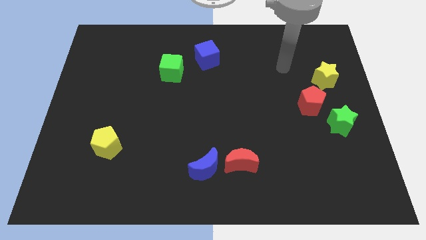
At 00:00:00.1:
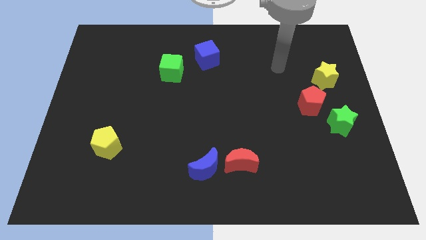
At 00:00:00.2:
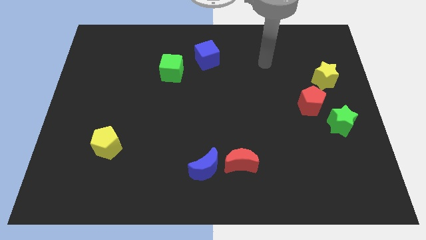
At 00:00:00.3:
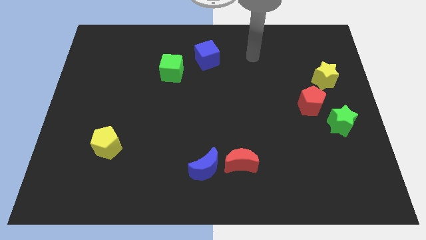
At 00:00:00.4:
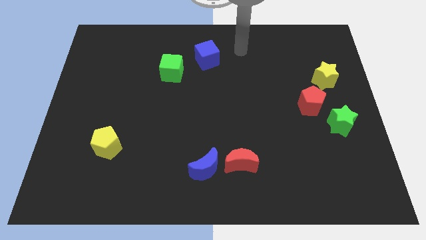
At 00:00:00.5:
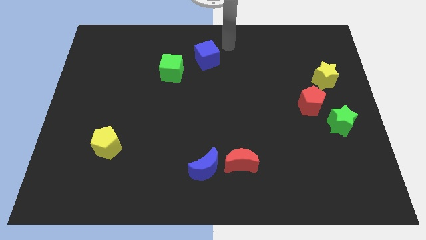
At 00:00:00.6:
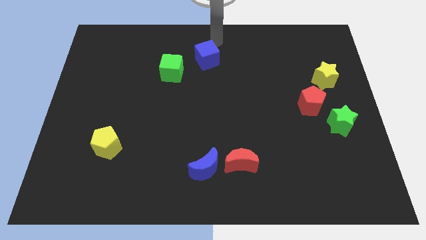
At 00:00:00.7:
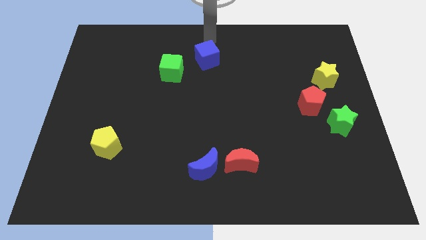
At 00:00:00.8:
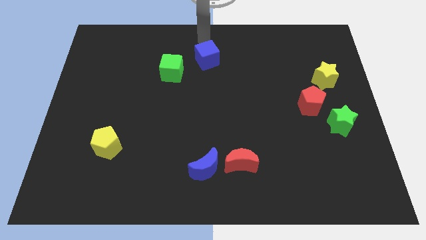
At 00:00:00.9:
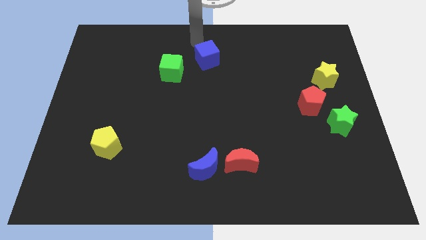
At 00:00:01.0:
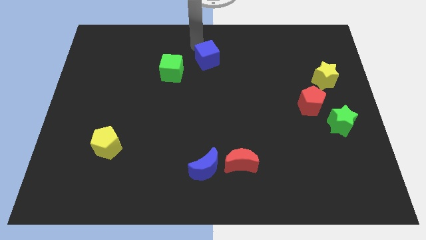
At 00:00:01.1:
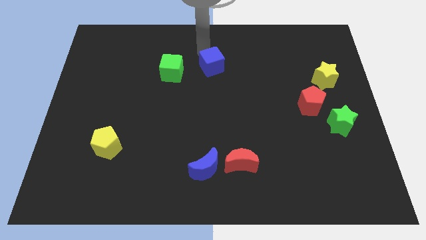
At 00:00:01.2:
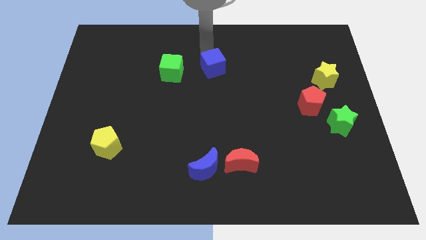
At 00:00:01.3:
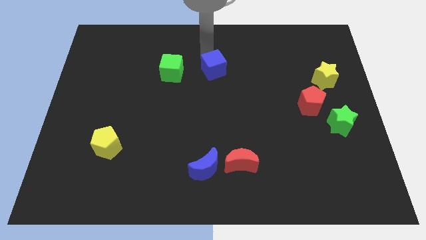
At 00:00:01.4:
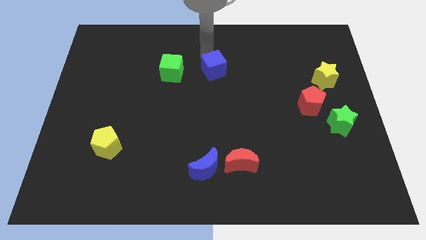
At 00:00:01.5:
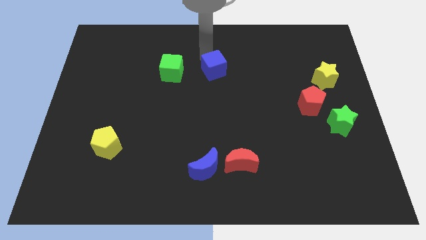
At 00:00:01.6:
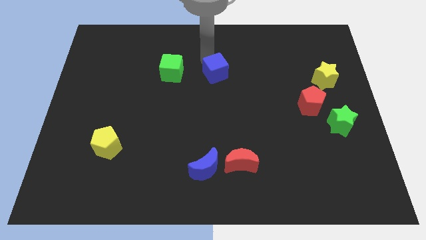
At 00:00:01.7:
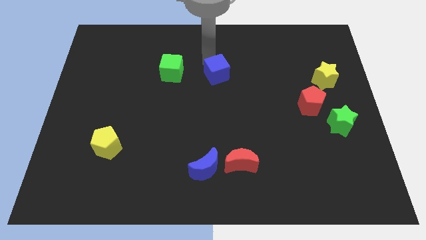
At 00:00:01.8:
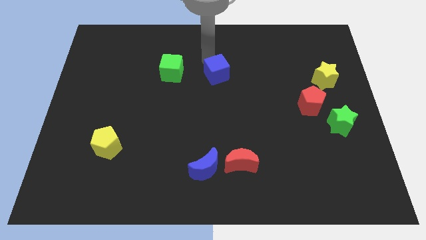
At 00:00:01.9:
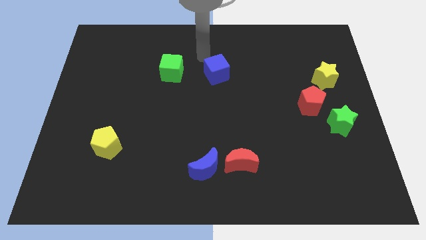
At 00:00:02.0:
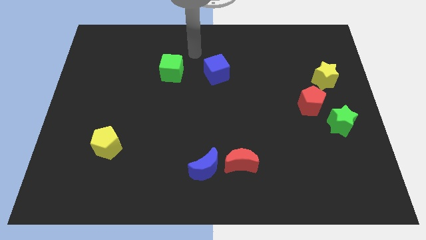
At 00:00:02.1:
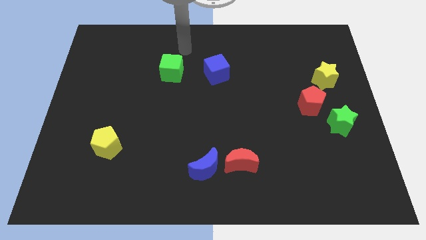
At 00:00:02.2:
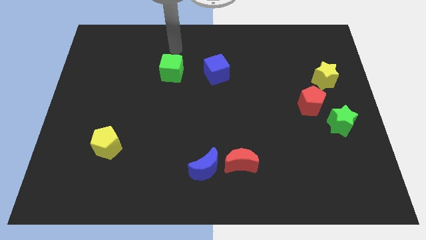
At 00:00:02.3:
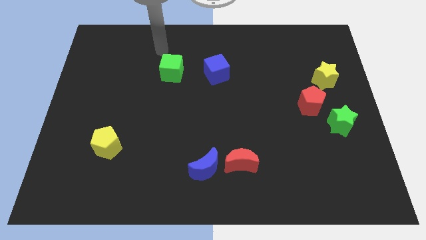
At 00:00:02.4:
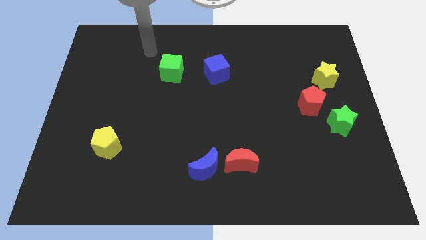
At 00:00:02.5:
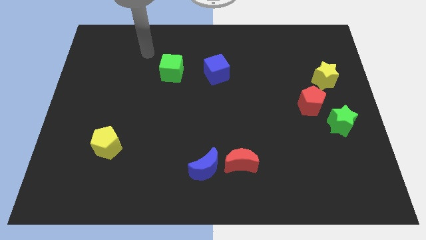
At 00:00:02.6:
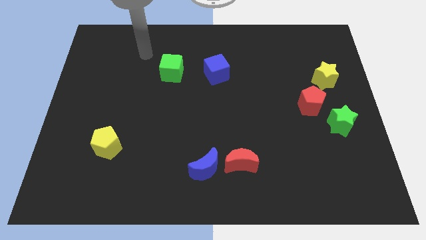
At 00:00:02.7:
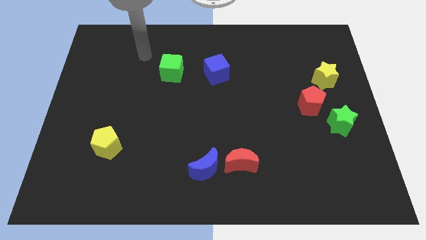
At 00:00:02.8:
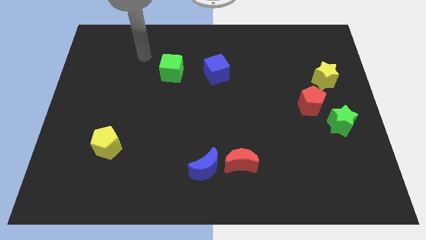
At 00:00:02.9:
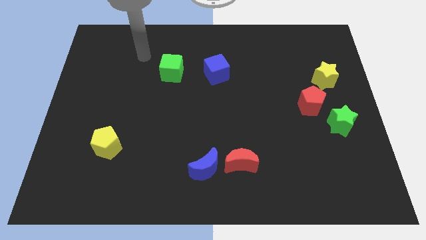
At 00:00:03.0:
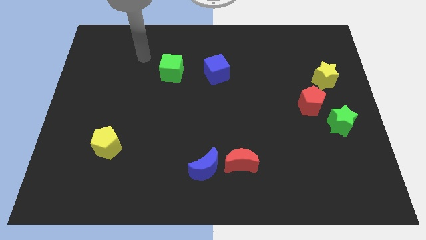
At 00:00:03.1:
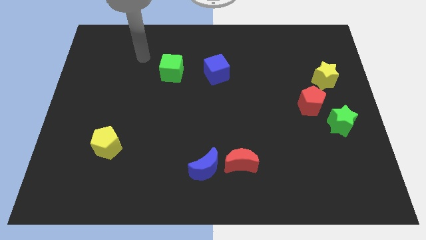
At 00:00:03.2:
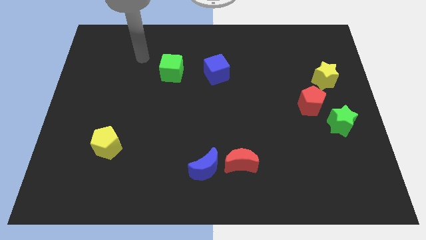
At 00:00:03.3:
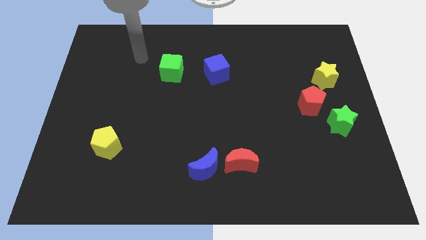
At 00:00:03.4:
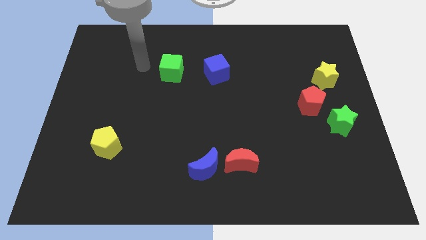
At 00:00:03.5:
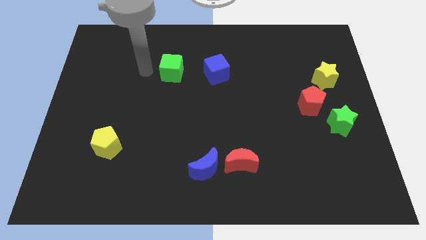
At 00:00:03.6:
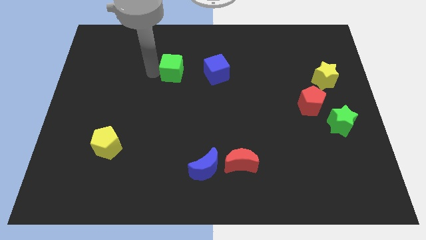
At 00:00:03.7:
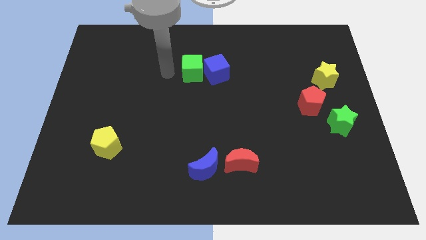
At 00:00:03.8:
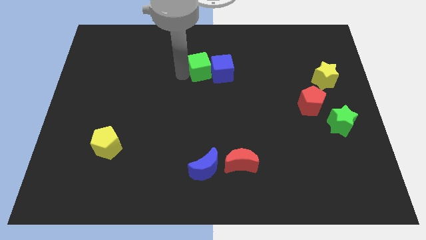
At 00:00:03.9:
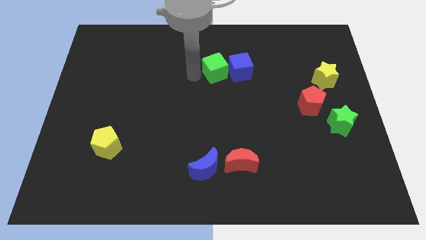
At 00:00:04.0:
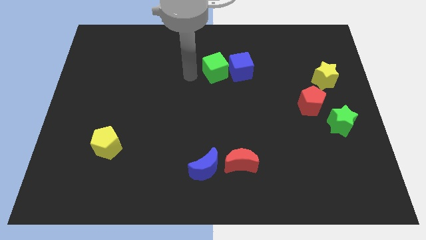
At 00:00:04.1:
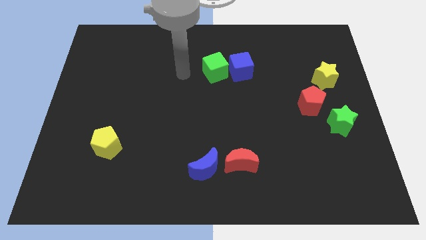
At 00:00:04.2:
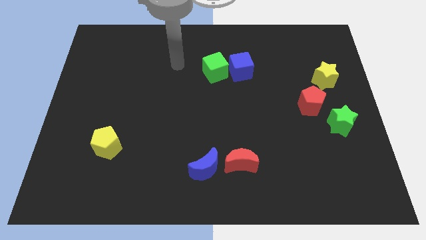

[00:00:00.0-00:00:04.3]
move the green cube into the blue cube

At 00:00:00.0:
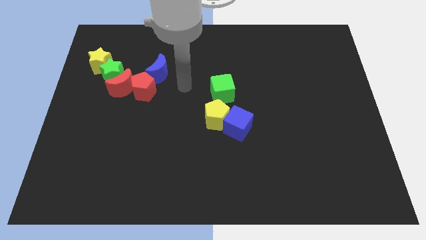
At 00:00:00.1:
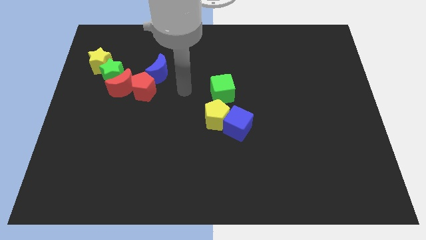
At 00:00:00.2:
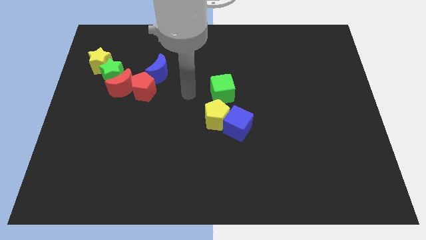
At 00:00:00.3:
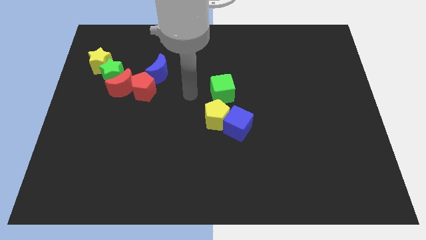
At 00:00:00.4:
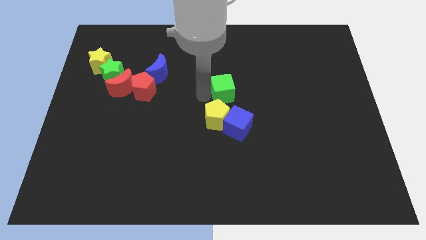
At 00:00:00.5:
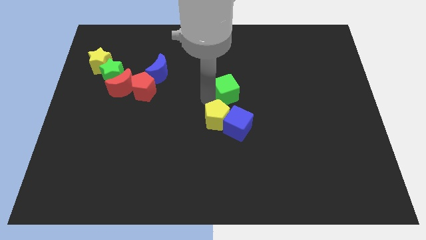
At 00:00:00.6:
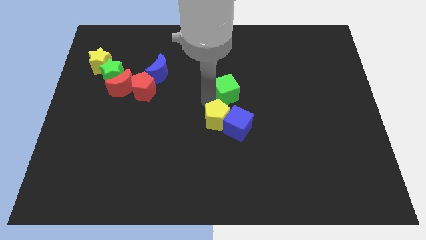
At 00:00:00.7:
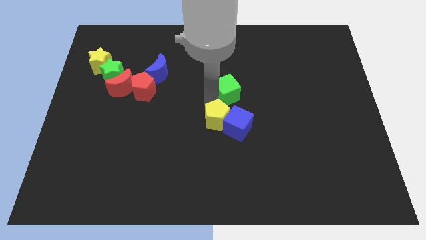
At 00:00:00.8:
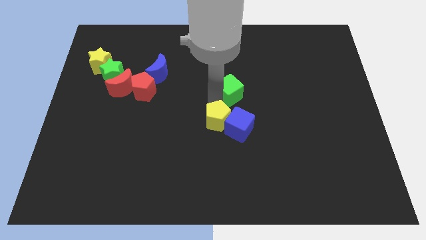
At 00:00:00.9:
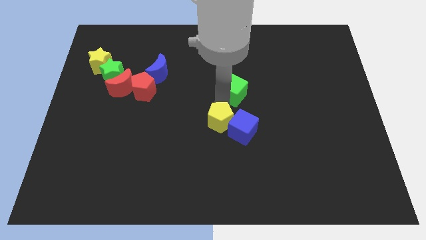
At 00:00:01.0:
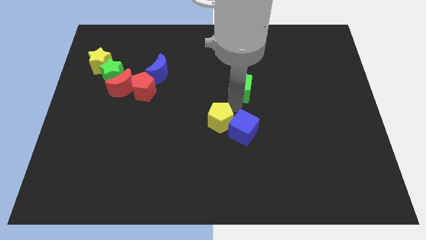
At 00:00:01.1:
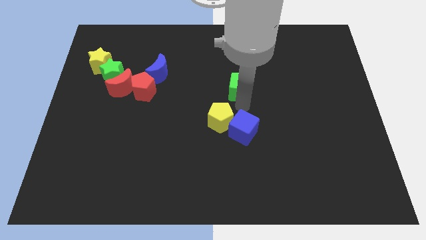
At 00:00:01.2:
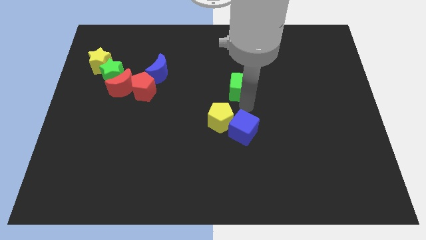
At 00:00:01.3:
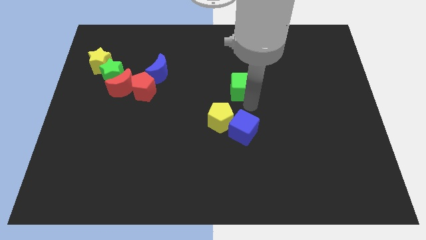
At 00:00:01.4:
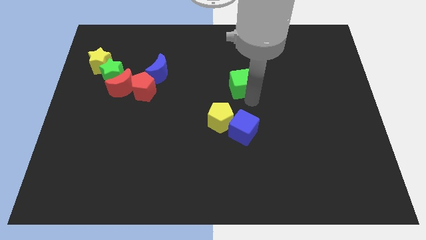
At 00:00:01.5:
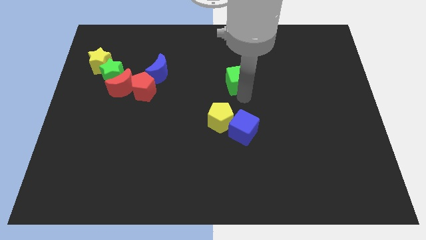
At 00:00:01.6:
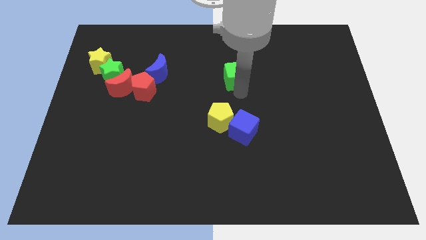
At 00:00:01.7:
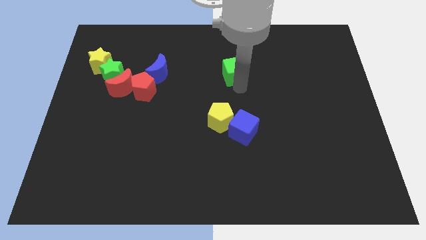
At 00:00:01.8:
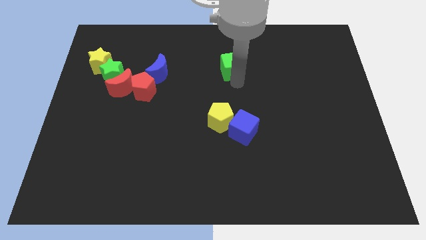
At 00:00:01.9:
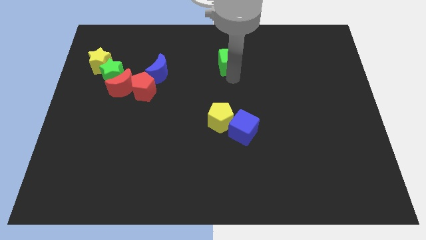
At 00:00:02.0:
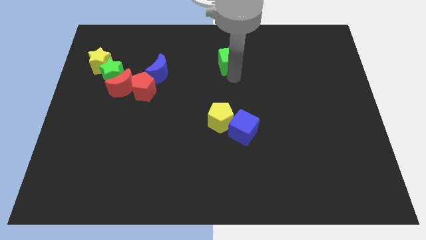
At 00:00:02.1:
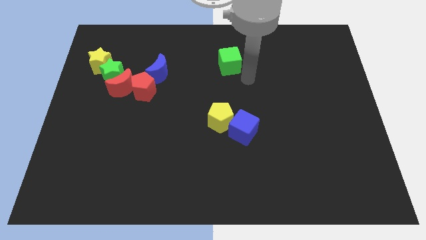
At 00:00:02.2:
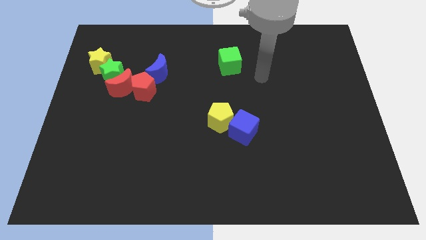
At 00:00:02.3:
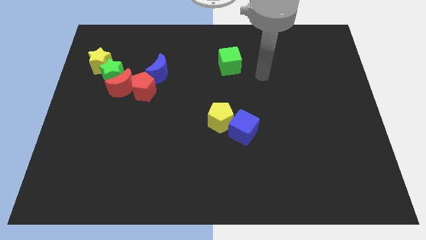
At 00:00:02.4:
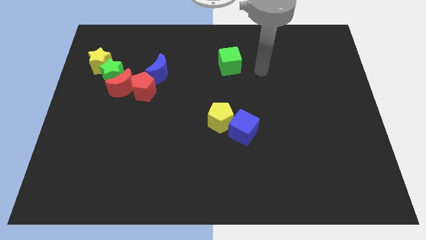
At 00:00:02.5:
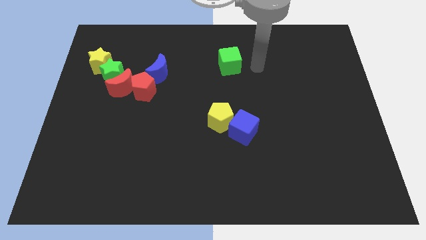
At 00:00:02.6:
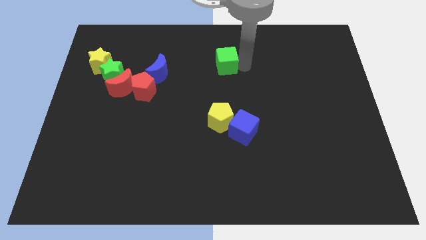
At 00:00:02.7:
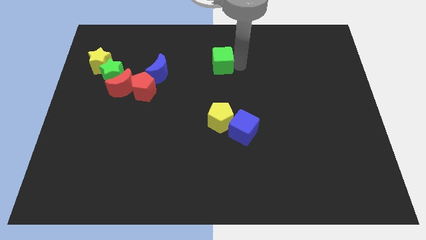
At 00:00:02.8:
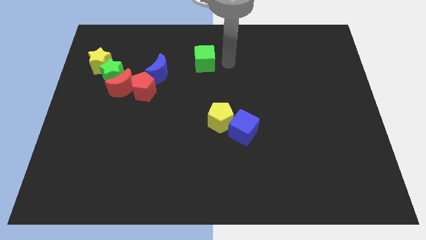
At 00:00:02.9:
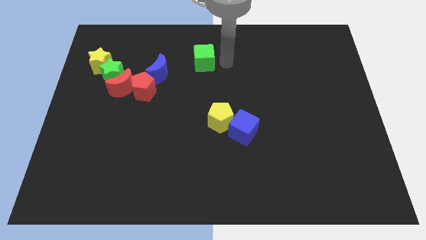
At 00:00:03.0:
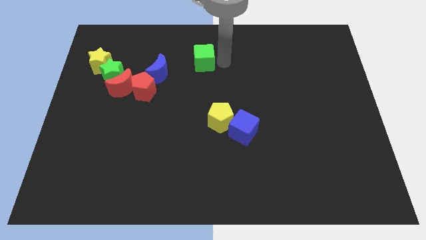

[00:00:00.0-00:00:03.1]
separate green cube from yellow pentagon

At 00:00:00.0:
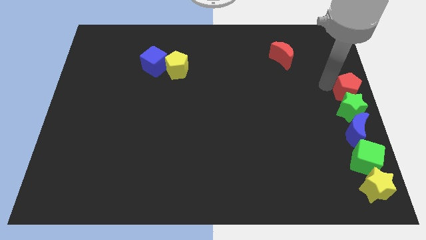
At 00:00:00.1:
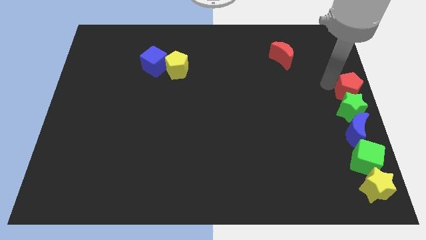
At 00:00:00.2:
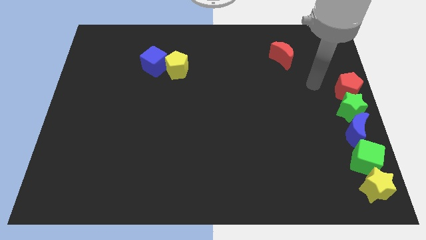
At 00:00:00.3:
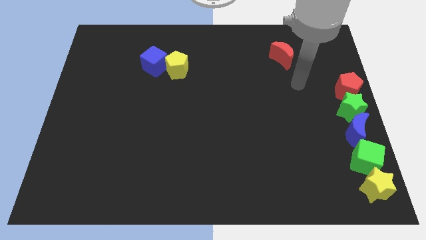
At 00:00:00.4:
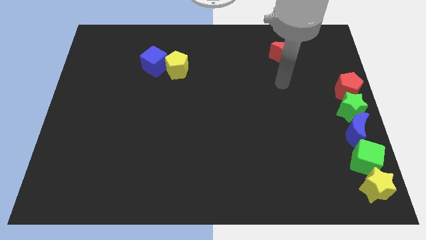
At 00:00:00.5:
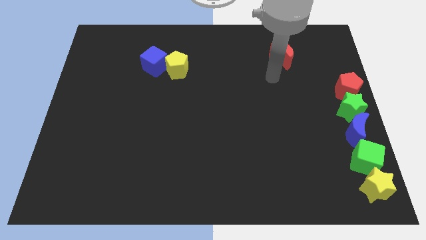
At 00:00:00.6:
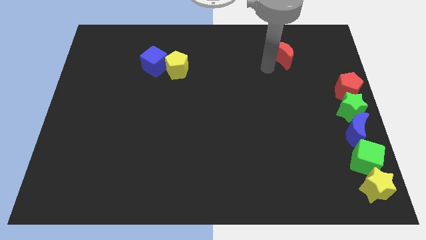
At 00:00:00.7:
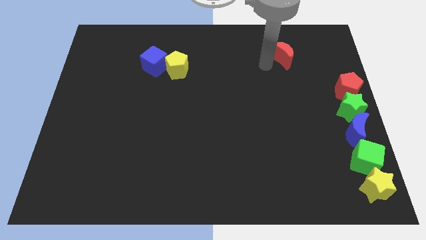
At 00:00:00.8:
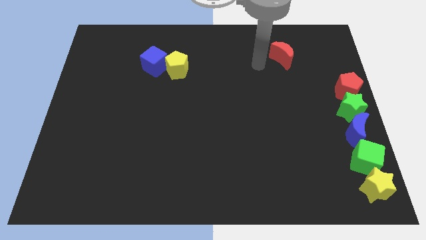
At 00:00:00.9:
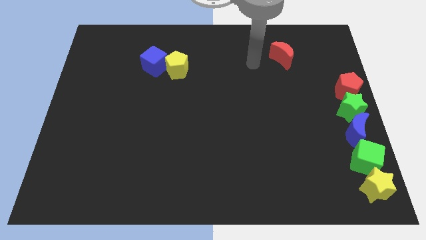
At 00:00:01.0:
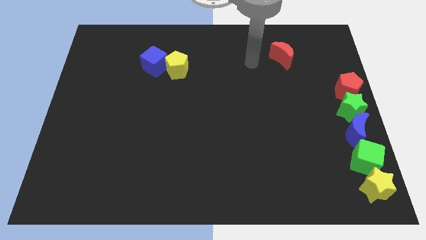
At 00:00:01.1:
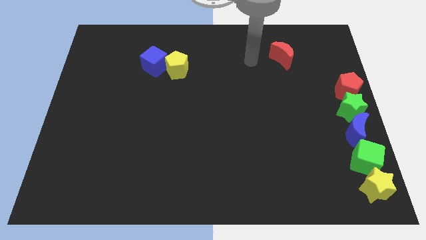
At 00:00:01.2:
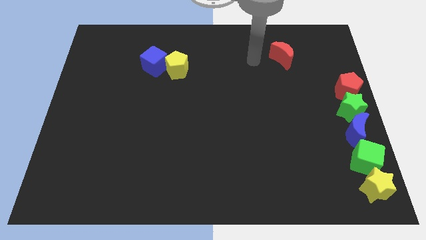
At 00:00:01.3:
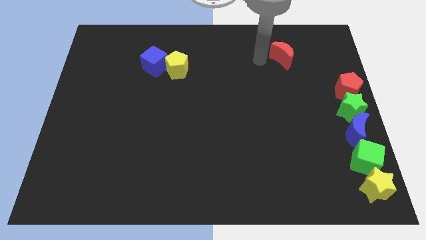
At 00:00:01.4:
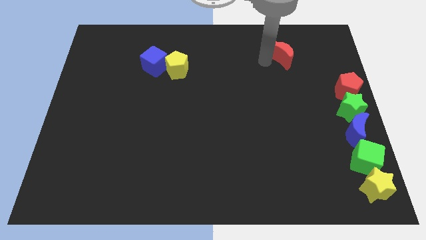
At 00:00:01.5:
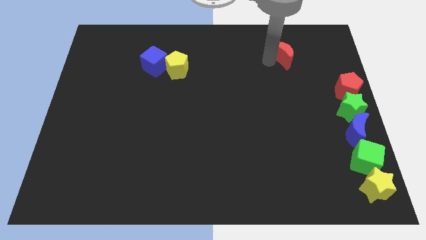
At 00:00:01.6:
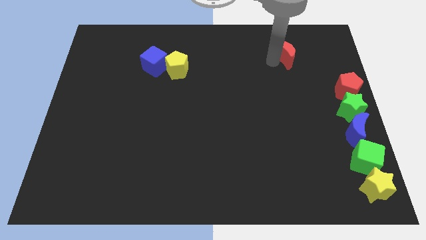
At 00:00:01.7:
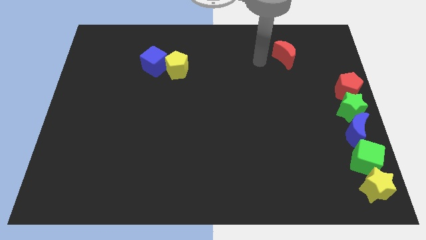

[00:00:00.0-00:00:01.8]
point your arm away from red pentagon
